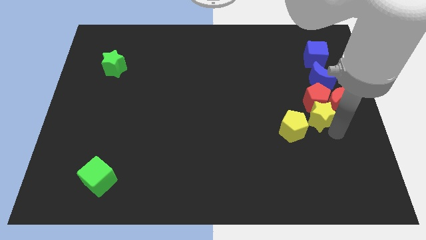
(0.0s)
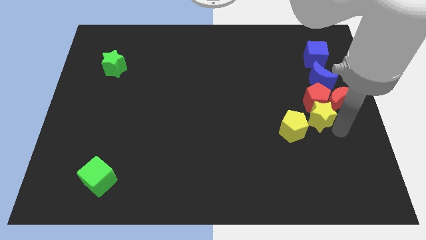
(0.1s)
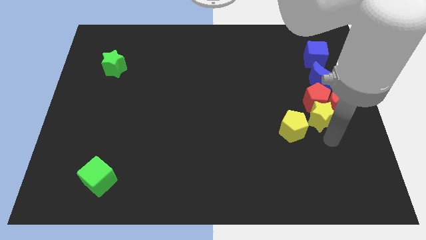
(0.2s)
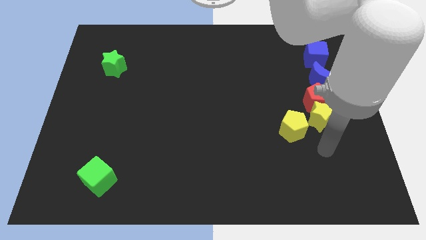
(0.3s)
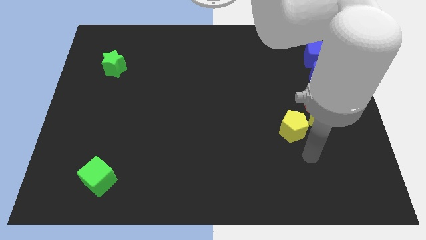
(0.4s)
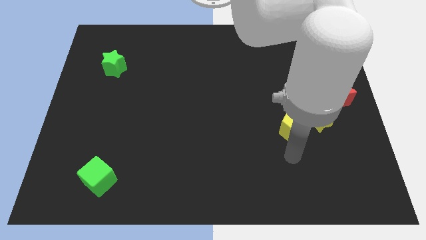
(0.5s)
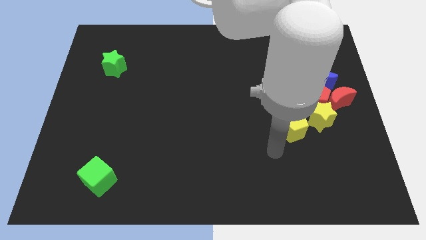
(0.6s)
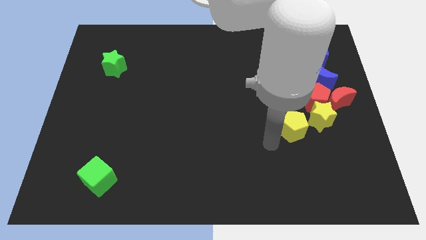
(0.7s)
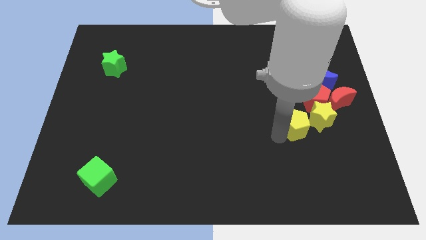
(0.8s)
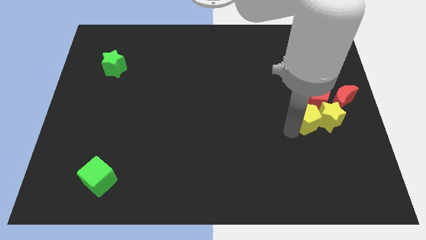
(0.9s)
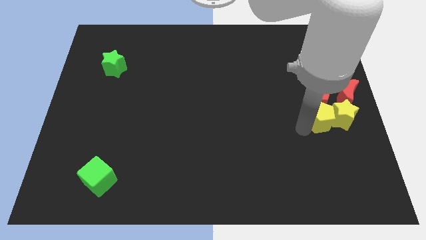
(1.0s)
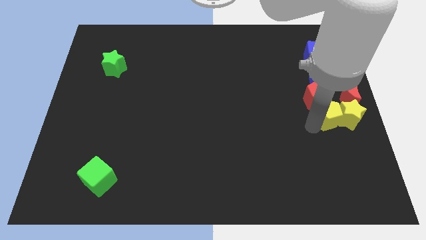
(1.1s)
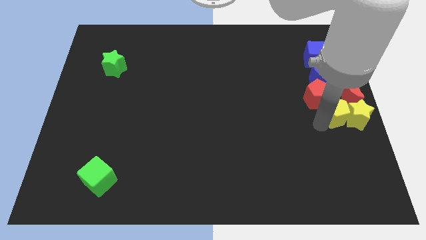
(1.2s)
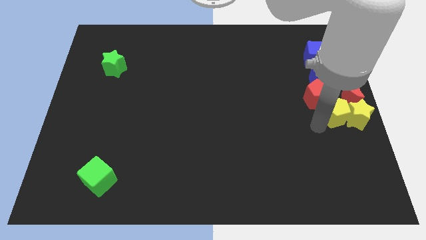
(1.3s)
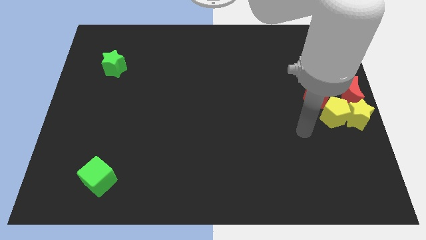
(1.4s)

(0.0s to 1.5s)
push the yellow pentagon into the yellow star

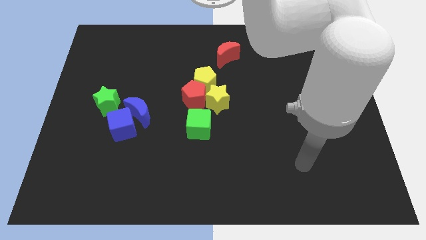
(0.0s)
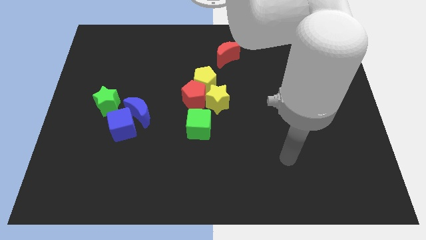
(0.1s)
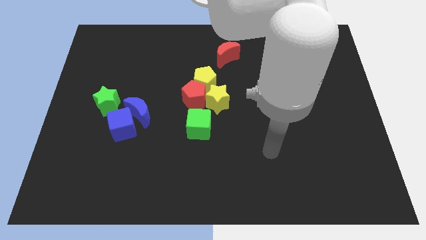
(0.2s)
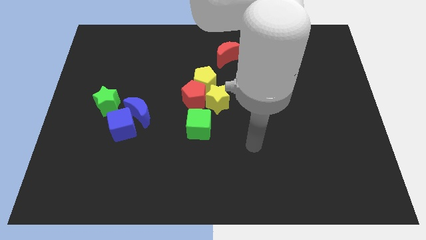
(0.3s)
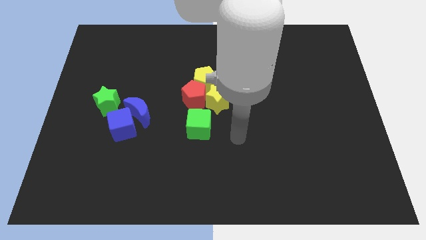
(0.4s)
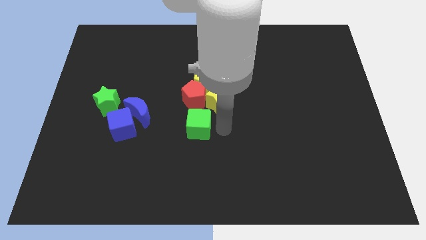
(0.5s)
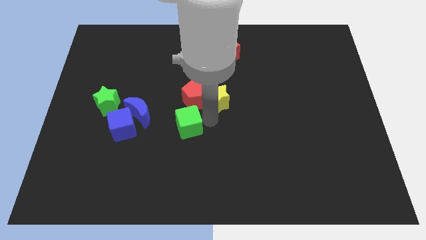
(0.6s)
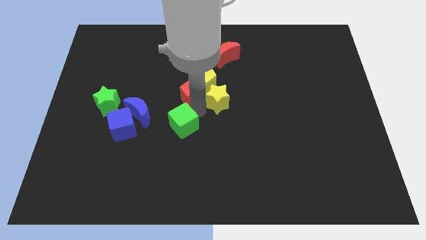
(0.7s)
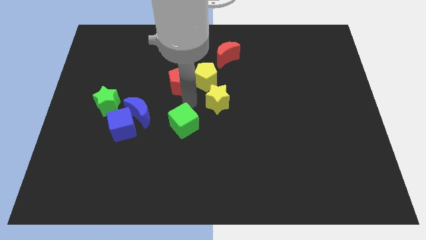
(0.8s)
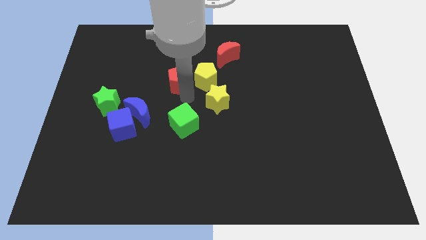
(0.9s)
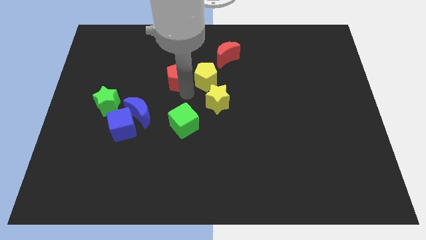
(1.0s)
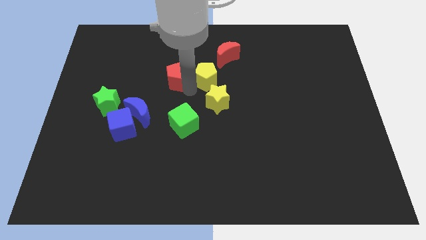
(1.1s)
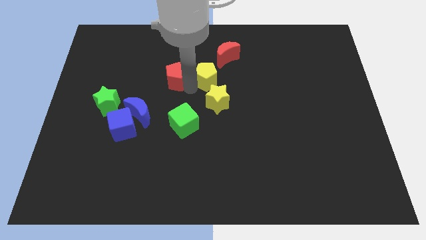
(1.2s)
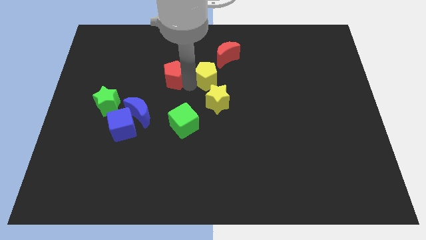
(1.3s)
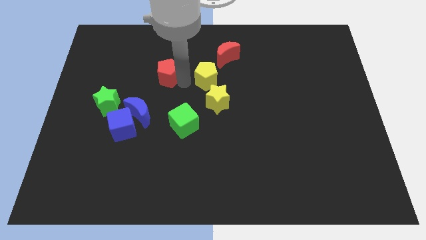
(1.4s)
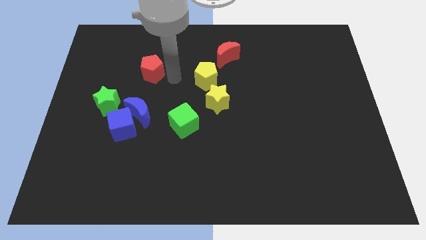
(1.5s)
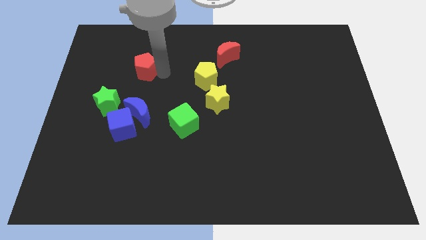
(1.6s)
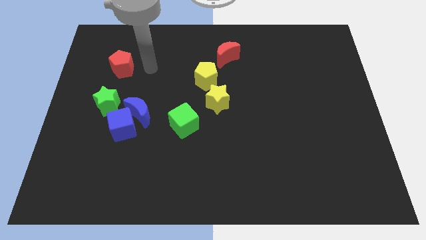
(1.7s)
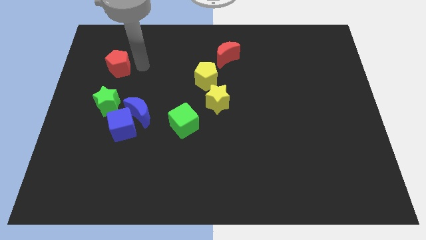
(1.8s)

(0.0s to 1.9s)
separate the red pentagon from the group of blocks

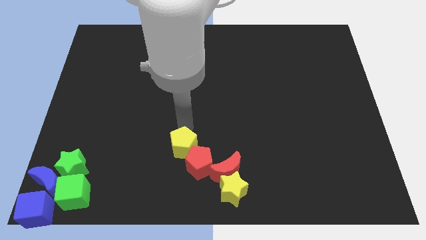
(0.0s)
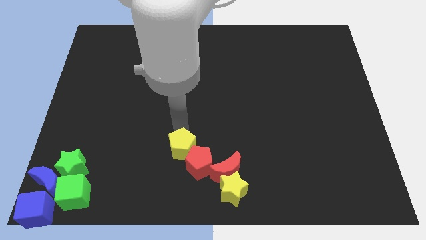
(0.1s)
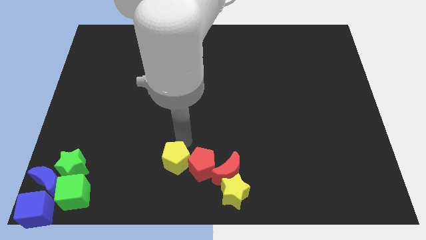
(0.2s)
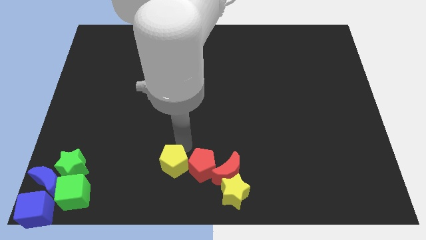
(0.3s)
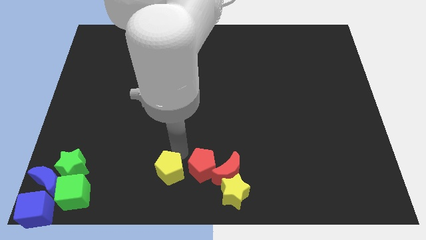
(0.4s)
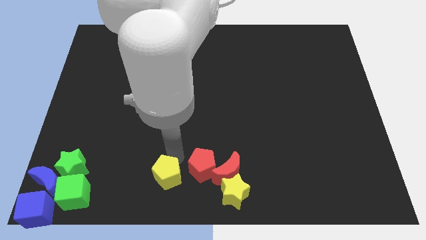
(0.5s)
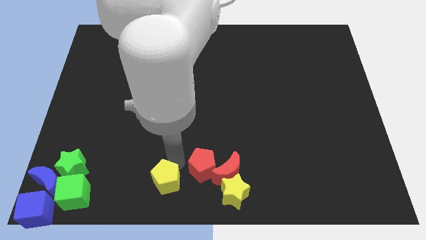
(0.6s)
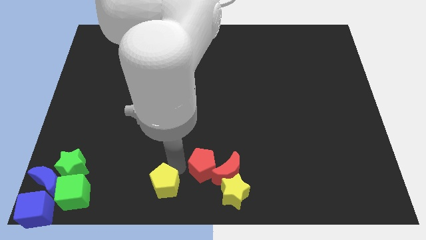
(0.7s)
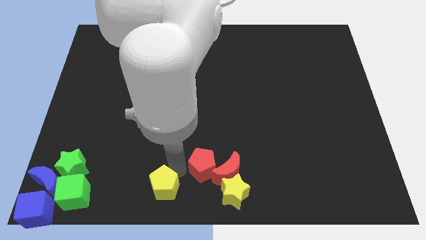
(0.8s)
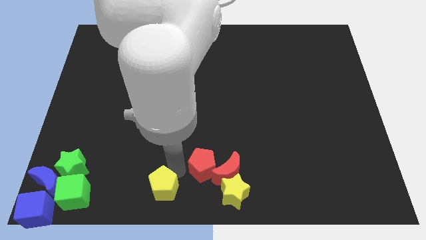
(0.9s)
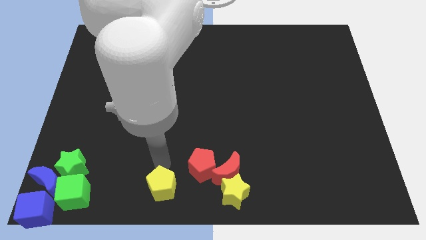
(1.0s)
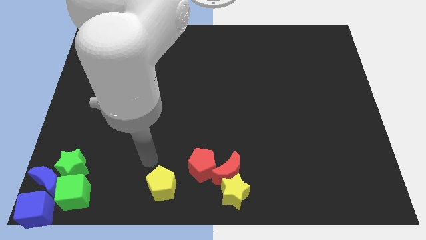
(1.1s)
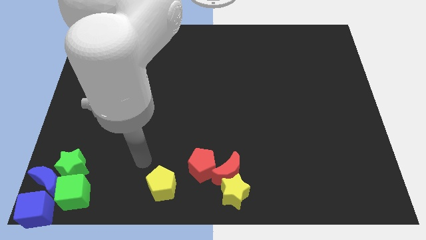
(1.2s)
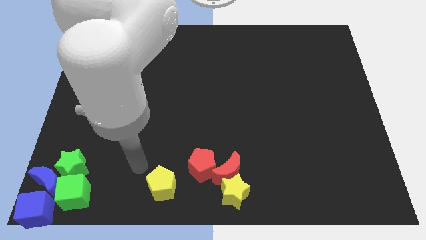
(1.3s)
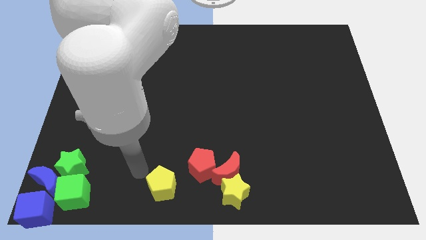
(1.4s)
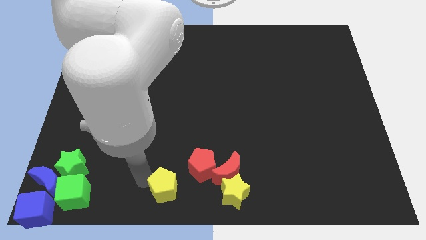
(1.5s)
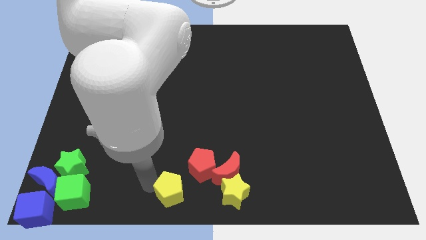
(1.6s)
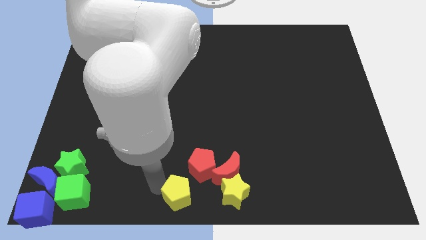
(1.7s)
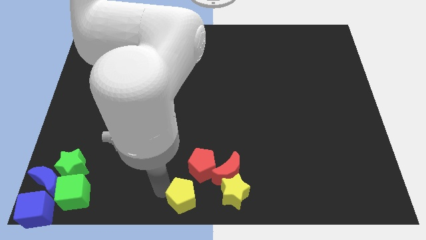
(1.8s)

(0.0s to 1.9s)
move the yellow pentagon to the left side of the yellow star

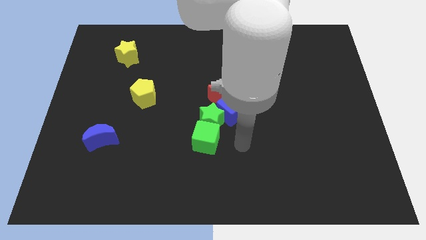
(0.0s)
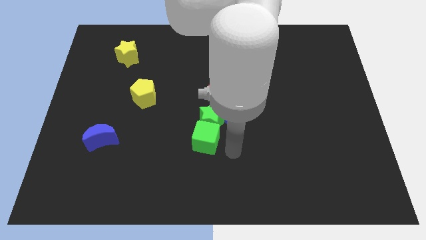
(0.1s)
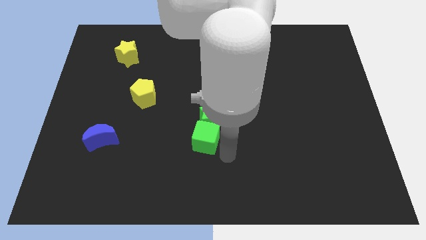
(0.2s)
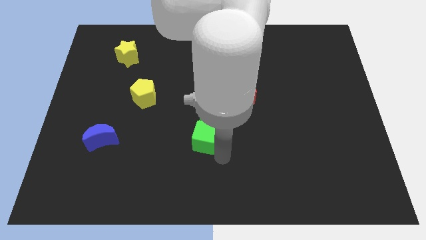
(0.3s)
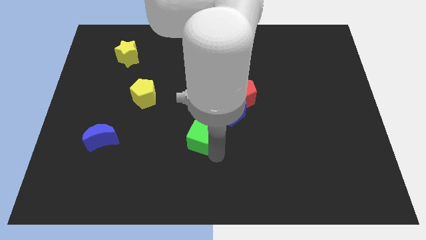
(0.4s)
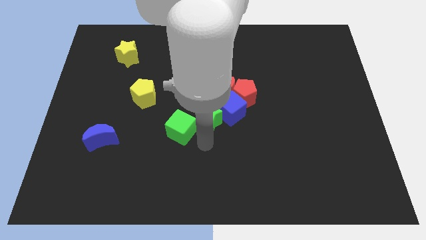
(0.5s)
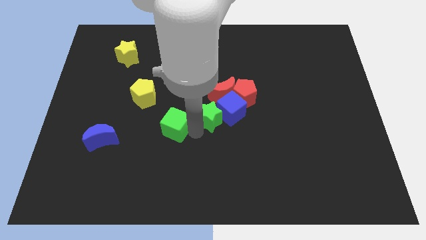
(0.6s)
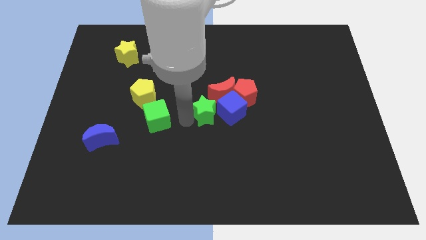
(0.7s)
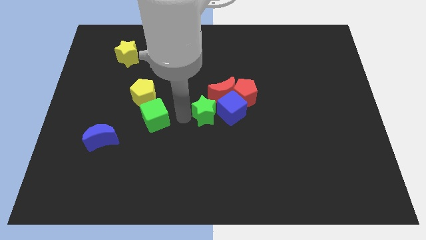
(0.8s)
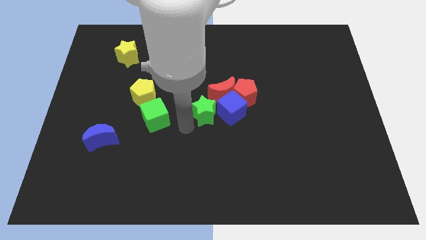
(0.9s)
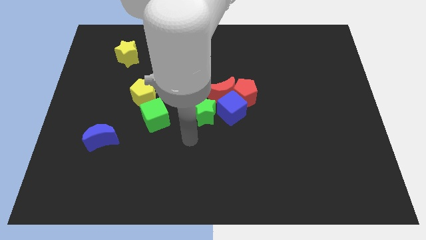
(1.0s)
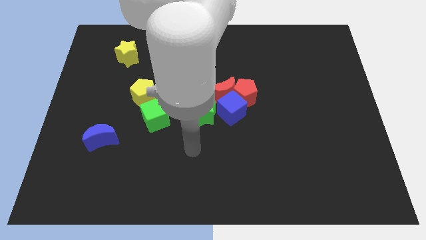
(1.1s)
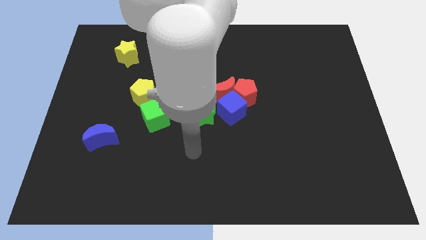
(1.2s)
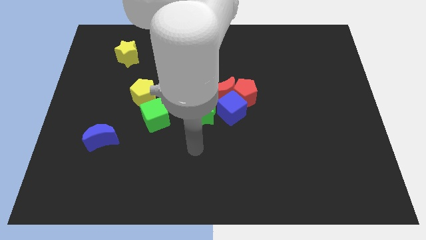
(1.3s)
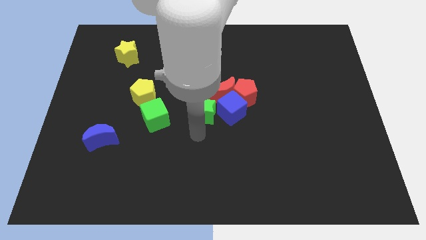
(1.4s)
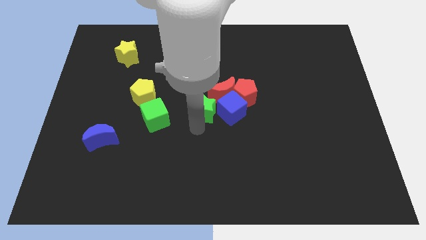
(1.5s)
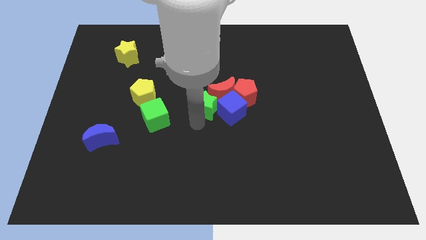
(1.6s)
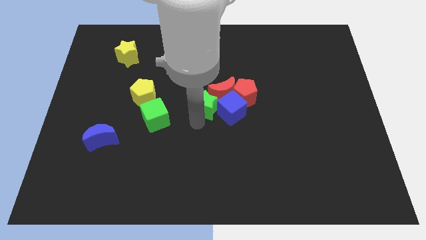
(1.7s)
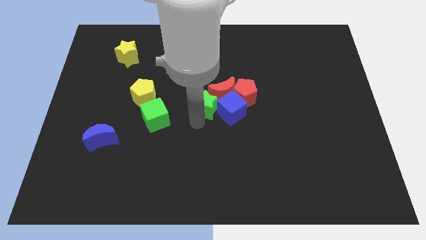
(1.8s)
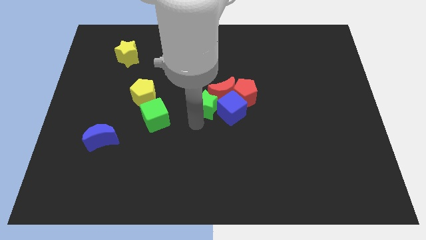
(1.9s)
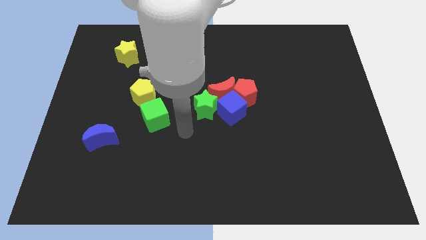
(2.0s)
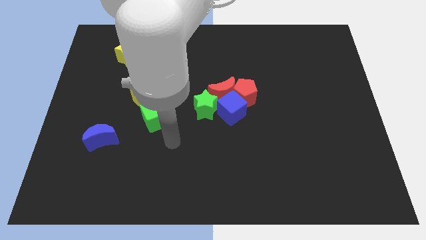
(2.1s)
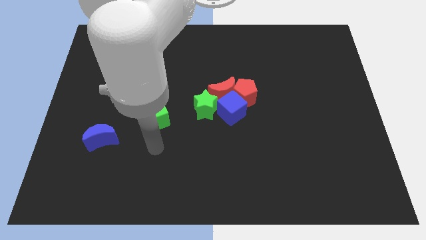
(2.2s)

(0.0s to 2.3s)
separate the green cube from the green star

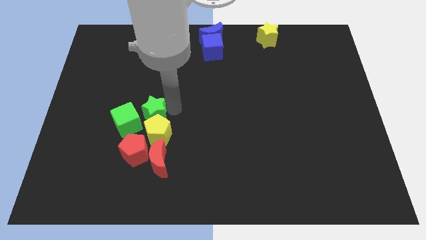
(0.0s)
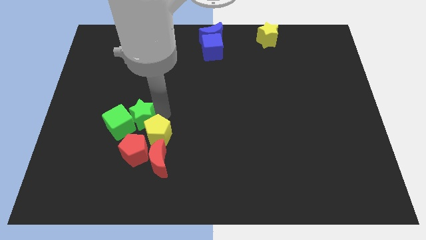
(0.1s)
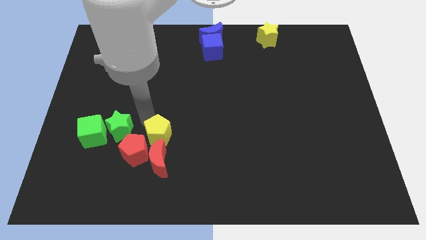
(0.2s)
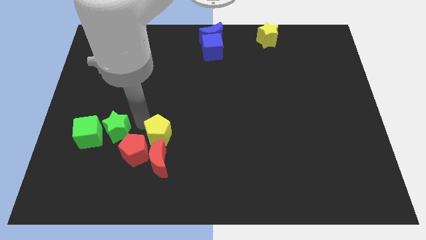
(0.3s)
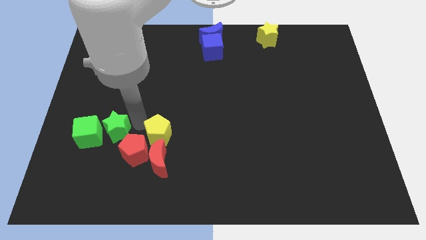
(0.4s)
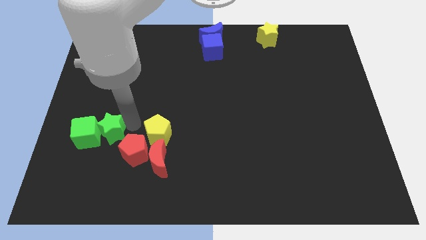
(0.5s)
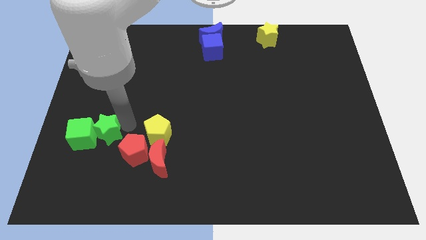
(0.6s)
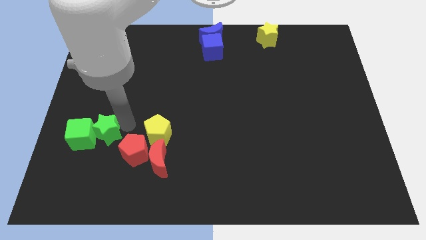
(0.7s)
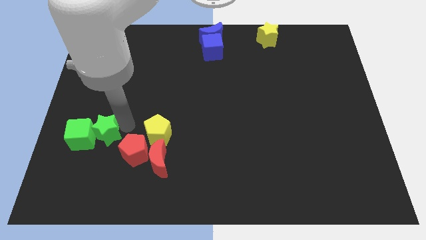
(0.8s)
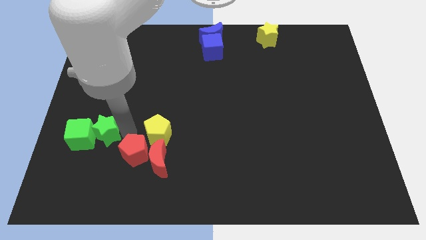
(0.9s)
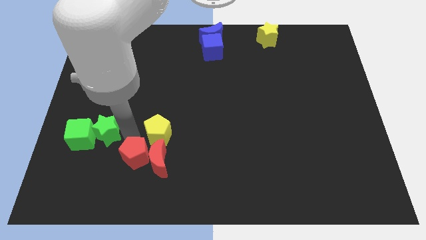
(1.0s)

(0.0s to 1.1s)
slide the green star into the green cube
